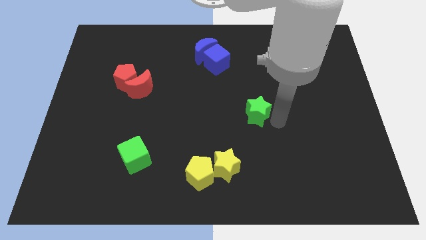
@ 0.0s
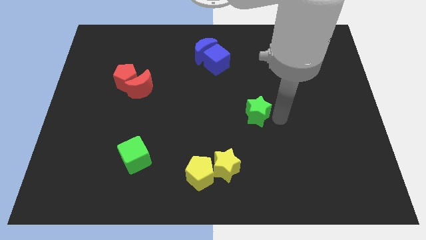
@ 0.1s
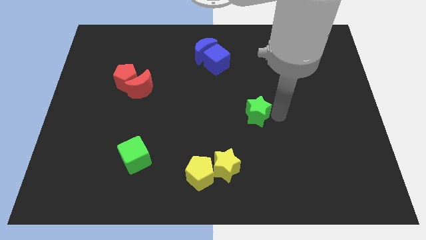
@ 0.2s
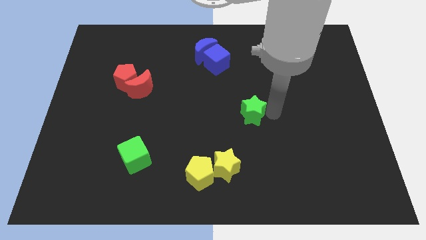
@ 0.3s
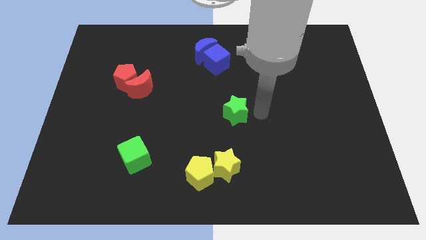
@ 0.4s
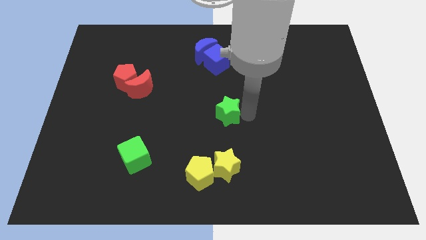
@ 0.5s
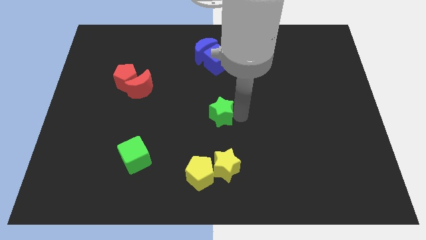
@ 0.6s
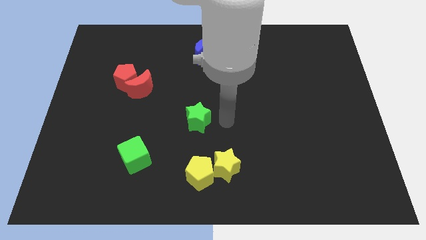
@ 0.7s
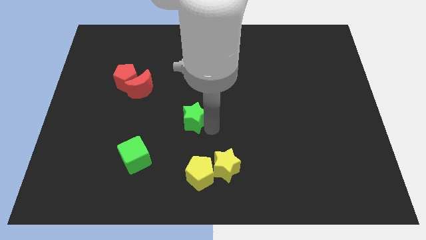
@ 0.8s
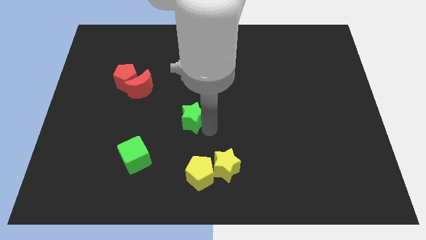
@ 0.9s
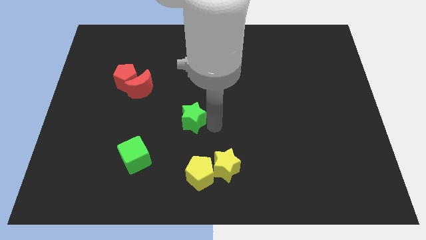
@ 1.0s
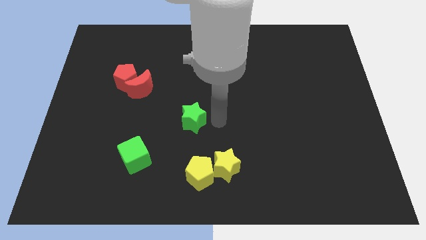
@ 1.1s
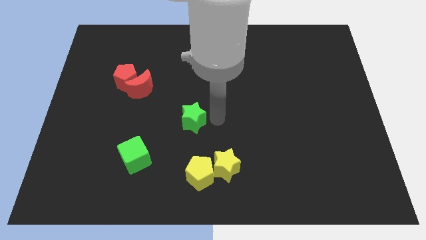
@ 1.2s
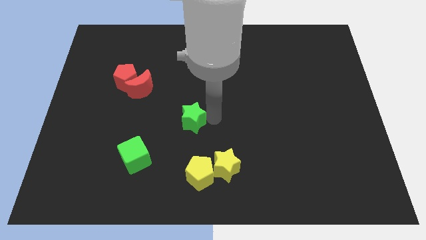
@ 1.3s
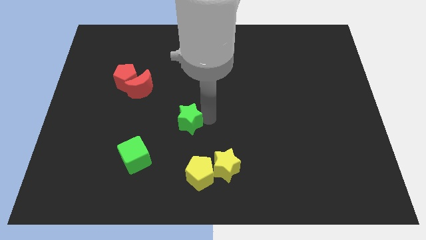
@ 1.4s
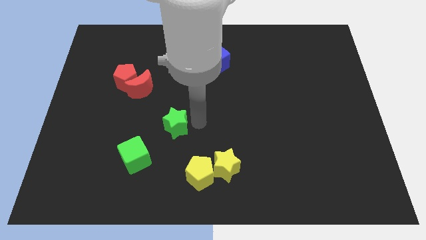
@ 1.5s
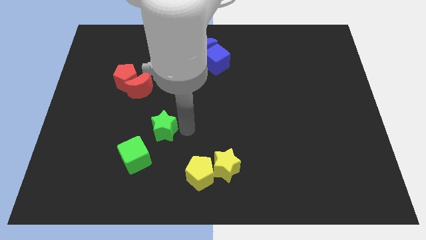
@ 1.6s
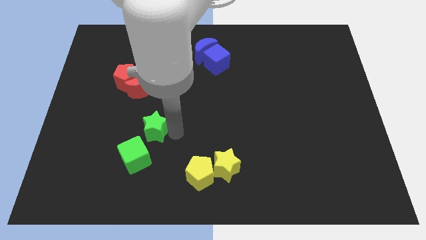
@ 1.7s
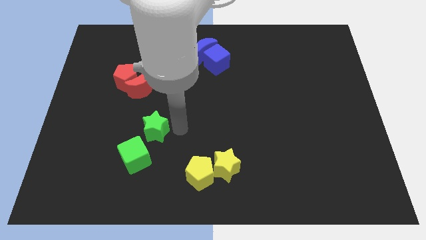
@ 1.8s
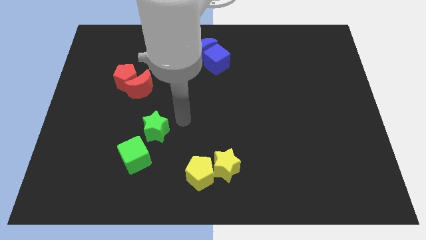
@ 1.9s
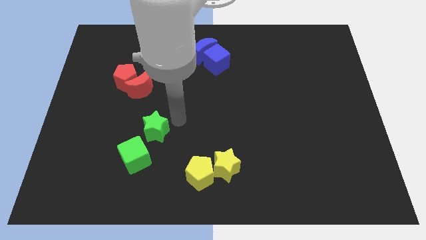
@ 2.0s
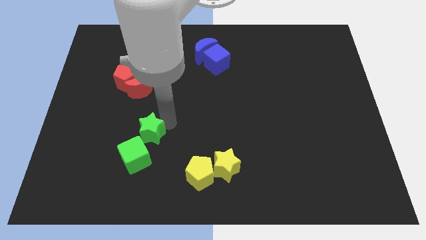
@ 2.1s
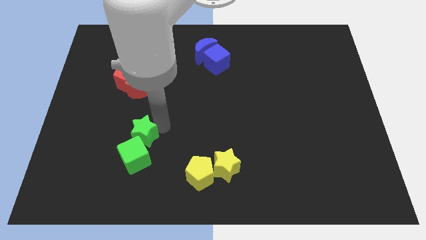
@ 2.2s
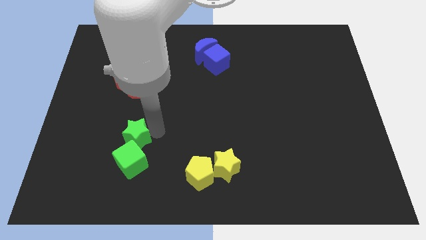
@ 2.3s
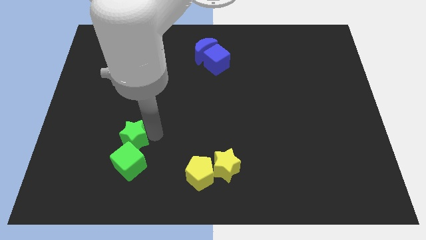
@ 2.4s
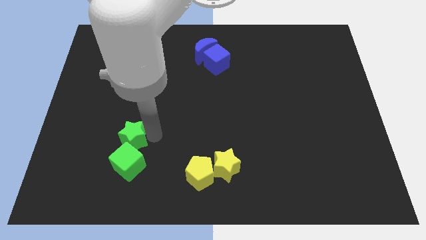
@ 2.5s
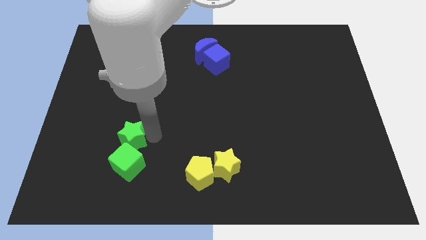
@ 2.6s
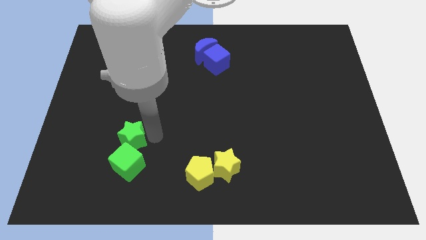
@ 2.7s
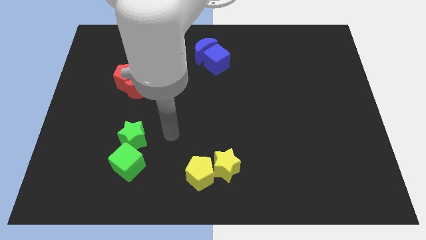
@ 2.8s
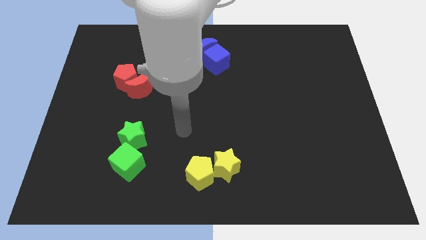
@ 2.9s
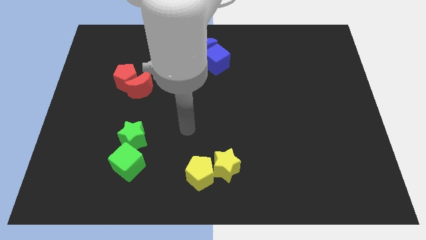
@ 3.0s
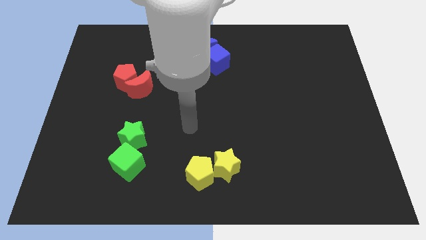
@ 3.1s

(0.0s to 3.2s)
place the green star above the green cube

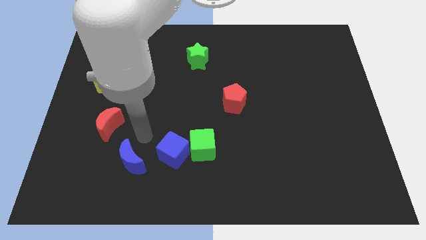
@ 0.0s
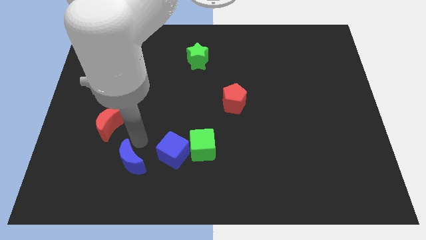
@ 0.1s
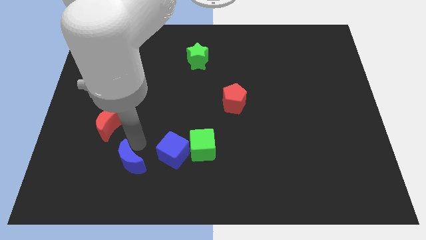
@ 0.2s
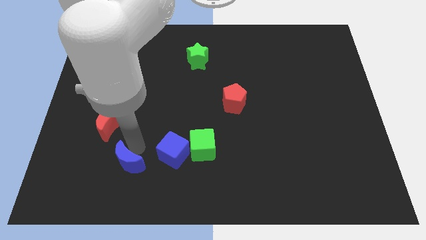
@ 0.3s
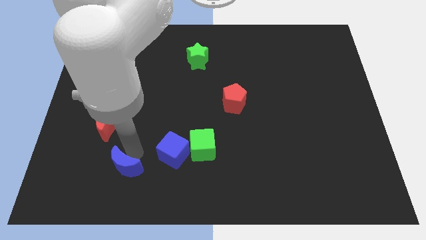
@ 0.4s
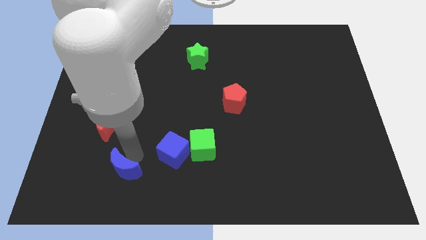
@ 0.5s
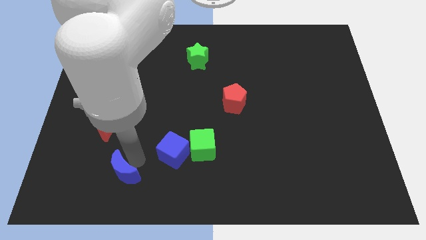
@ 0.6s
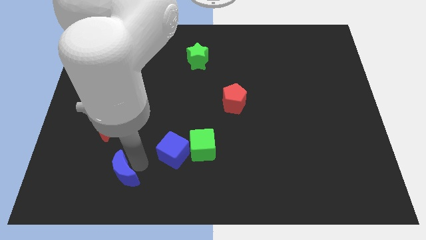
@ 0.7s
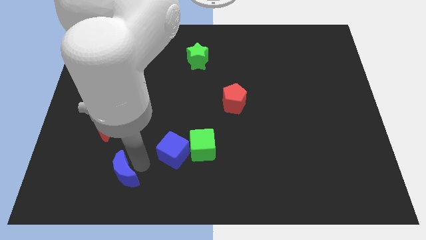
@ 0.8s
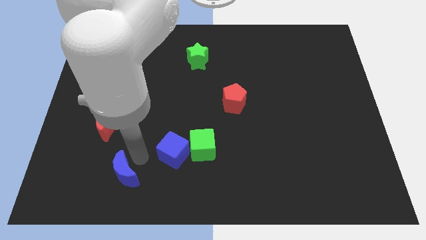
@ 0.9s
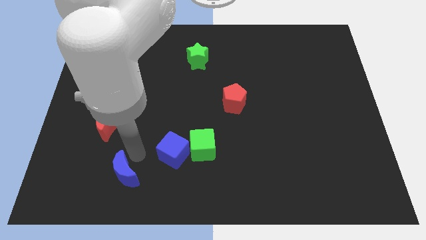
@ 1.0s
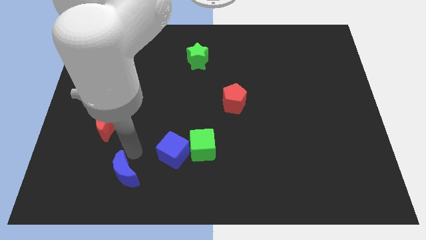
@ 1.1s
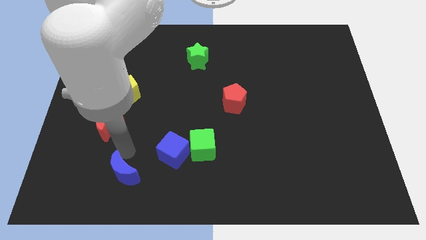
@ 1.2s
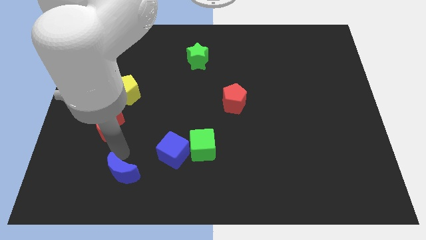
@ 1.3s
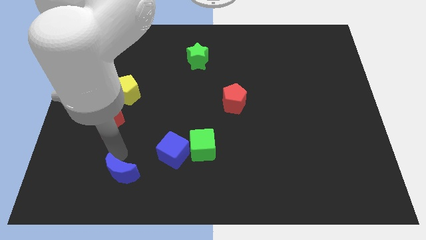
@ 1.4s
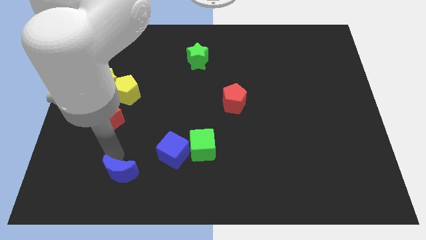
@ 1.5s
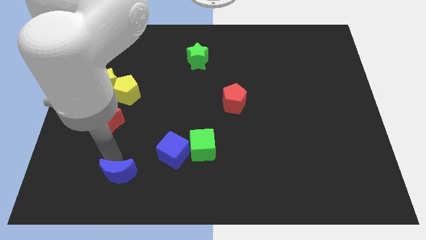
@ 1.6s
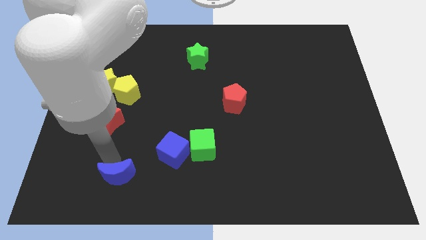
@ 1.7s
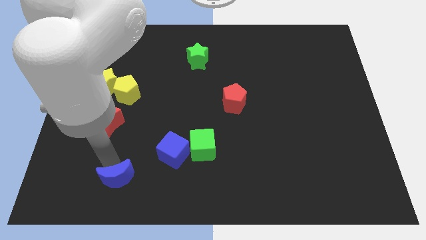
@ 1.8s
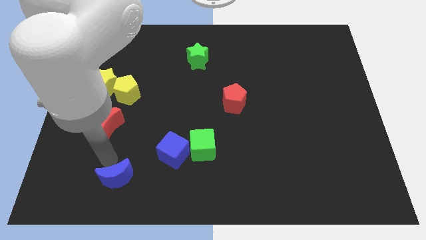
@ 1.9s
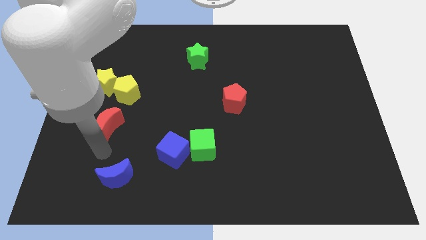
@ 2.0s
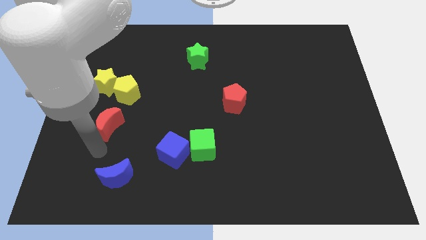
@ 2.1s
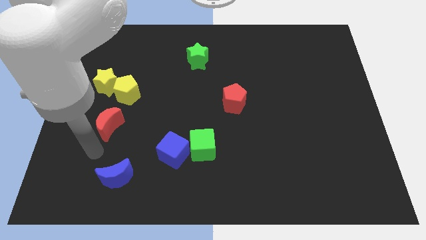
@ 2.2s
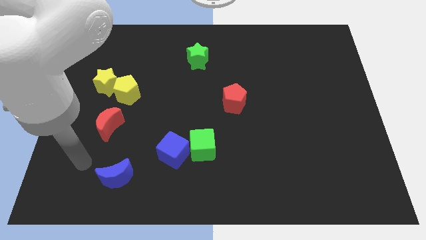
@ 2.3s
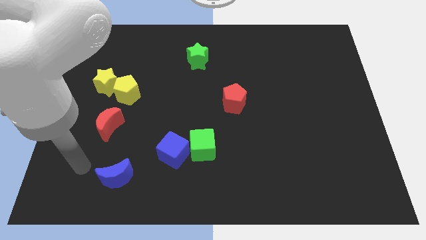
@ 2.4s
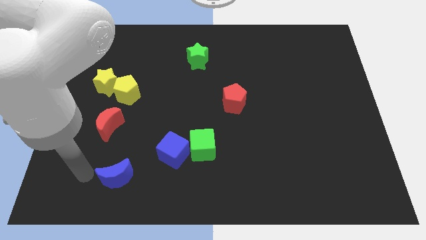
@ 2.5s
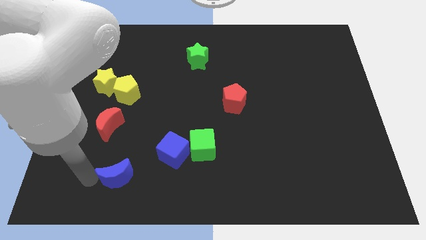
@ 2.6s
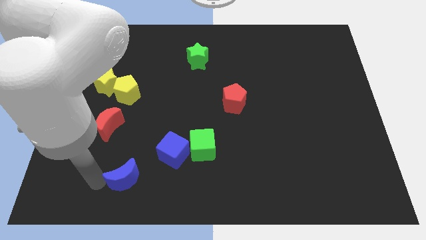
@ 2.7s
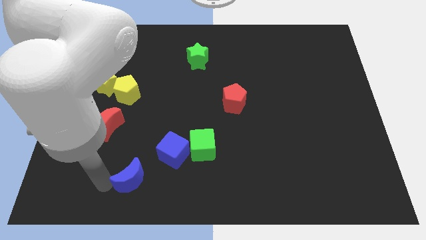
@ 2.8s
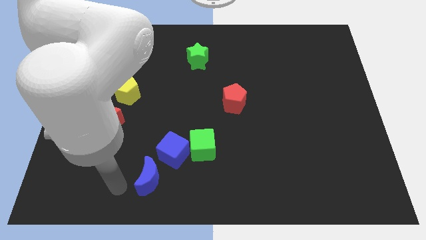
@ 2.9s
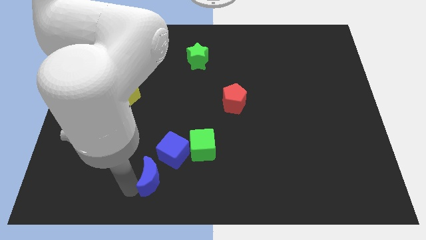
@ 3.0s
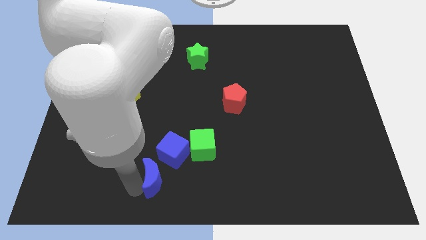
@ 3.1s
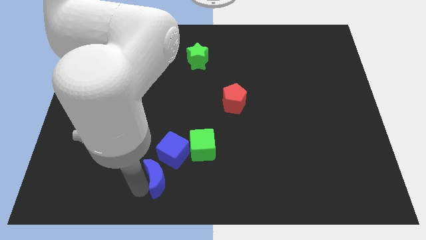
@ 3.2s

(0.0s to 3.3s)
put the blue moon at the bottom left side of blue cube

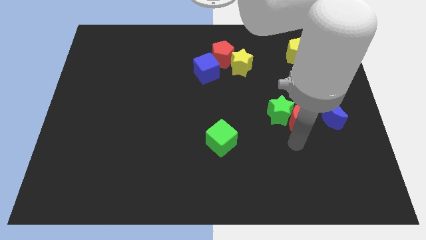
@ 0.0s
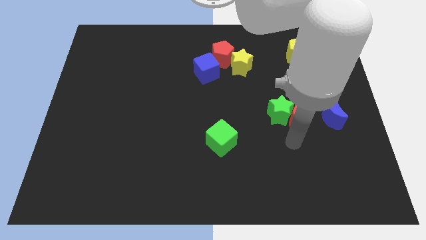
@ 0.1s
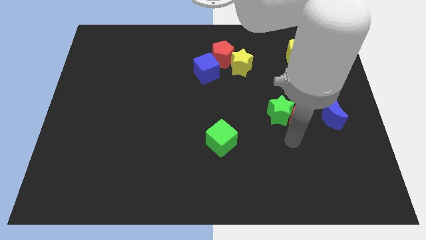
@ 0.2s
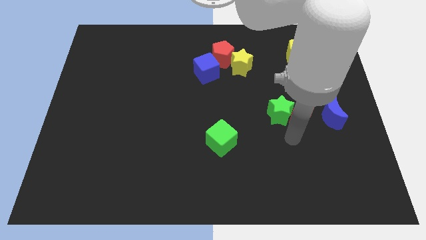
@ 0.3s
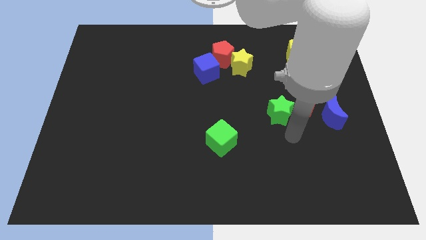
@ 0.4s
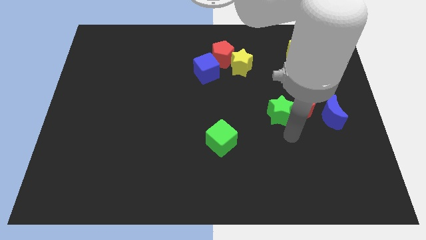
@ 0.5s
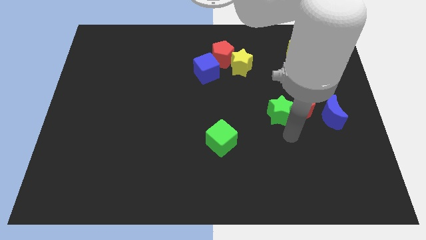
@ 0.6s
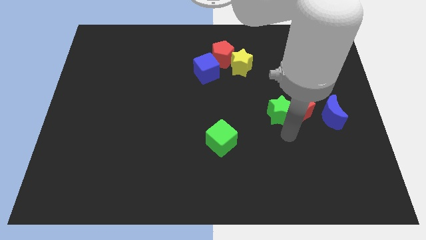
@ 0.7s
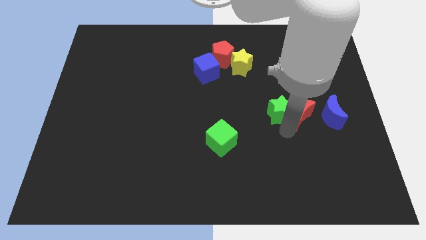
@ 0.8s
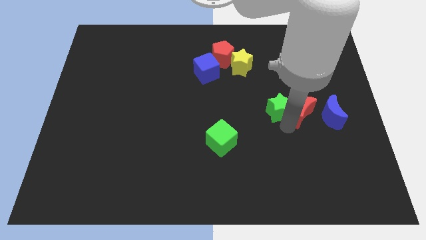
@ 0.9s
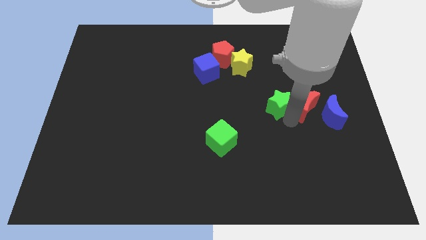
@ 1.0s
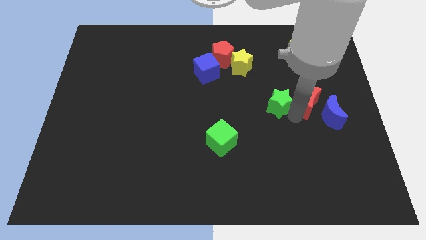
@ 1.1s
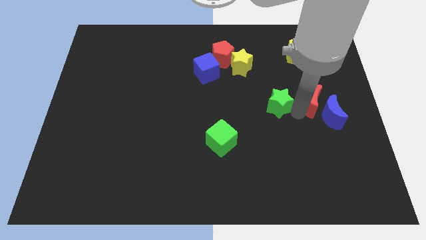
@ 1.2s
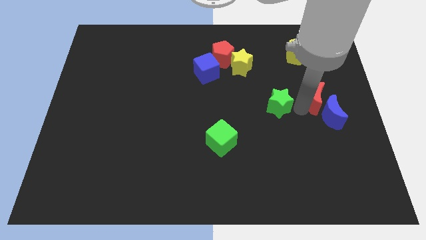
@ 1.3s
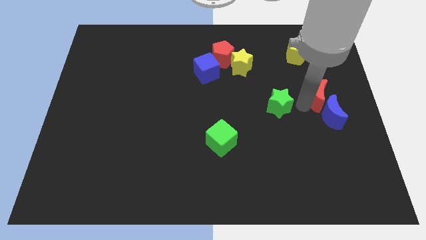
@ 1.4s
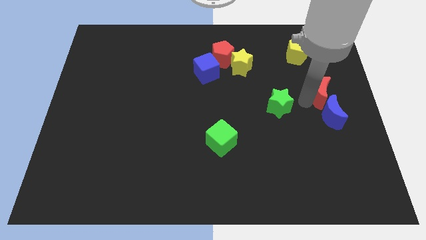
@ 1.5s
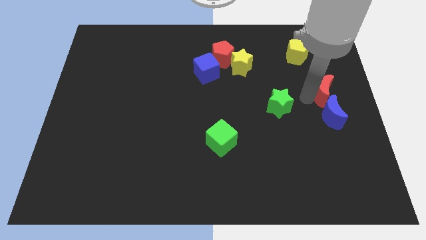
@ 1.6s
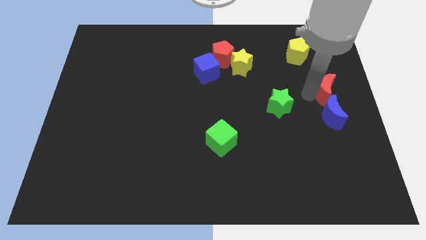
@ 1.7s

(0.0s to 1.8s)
place the red moon vertically above the blue crescent

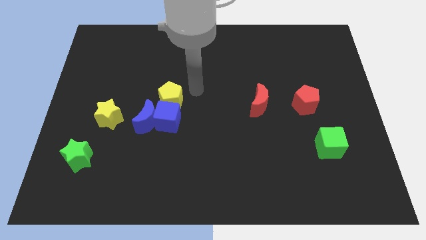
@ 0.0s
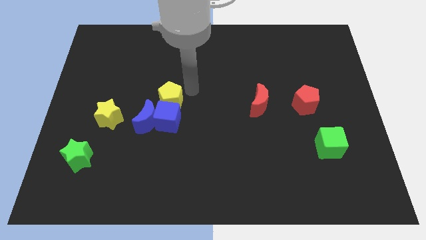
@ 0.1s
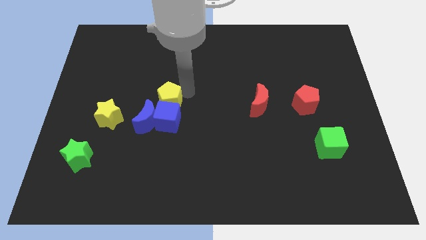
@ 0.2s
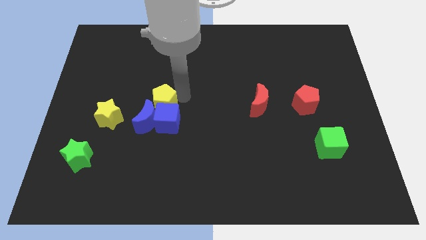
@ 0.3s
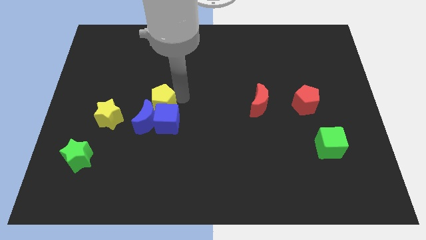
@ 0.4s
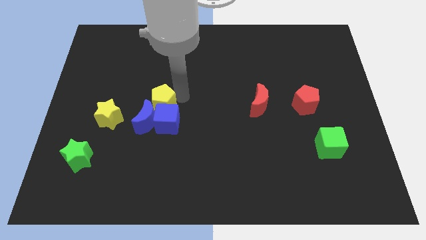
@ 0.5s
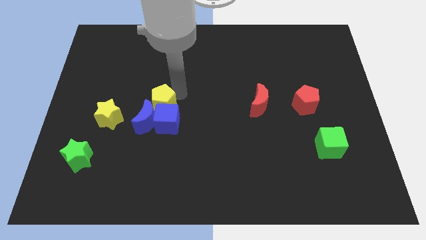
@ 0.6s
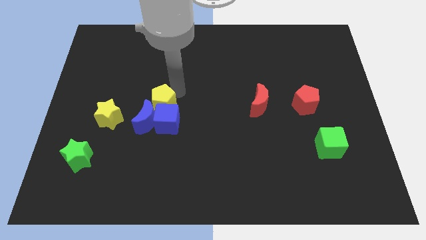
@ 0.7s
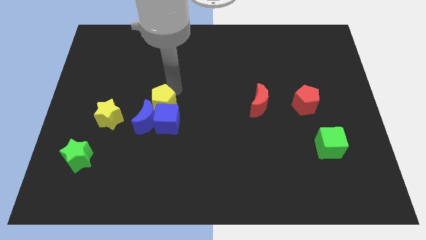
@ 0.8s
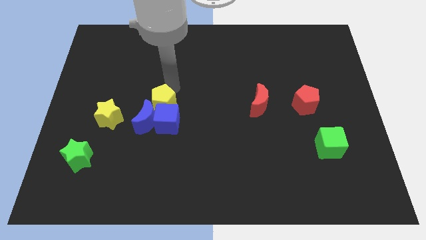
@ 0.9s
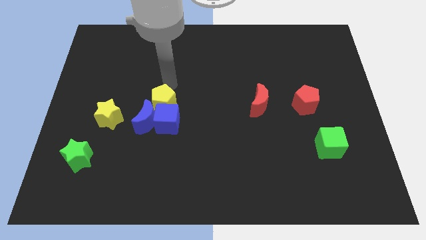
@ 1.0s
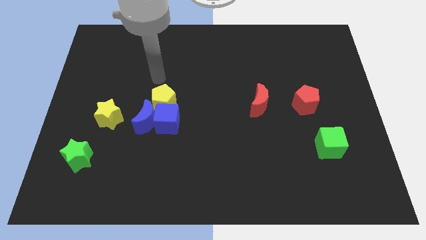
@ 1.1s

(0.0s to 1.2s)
push the yellow pentagon above the blue blocks
